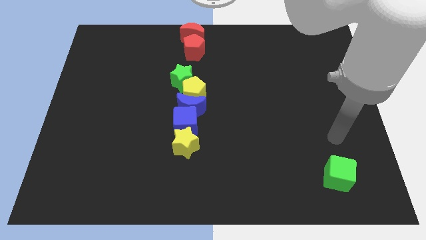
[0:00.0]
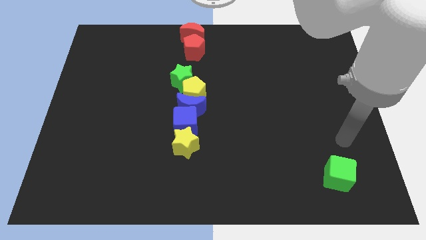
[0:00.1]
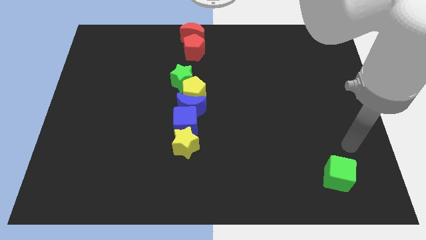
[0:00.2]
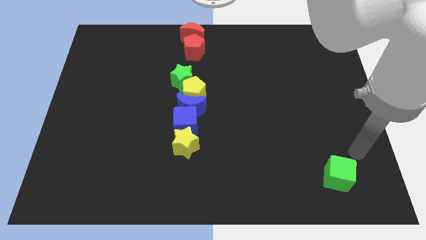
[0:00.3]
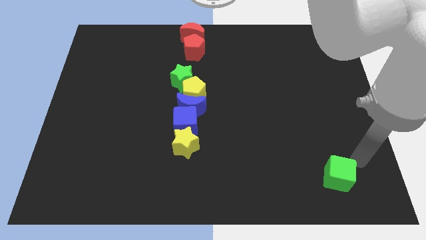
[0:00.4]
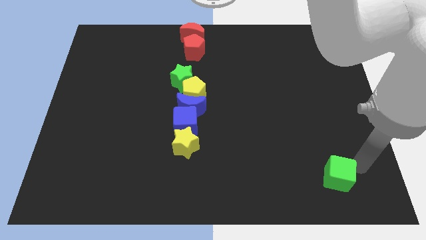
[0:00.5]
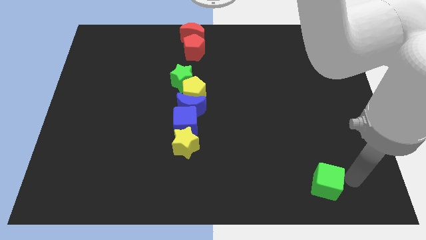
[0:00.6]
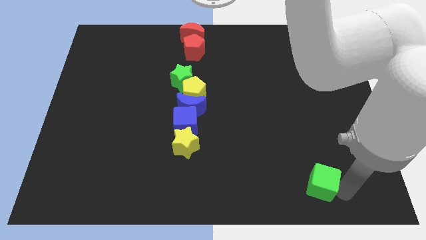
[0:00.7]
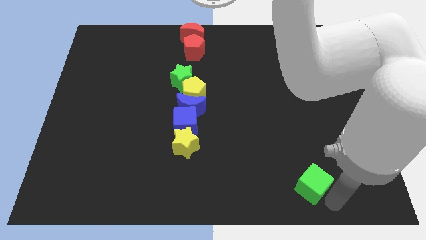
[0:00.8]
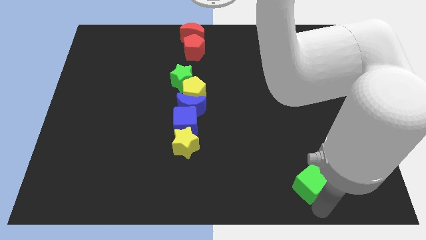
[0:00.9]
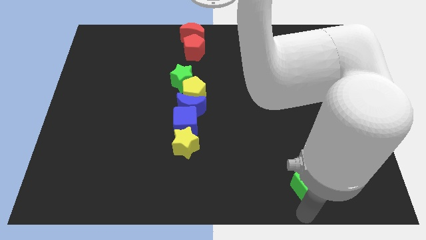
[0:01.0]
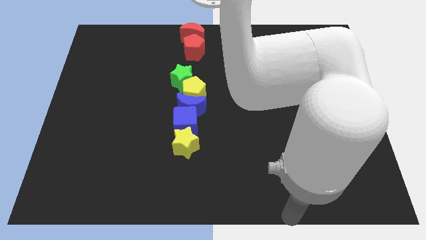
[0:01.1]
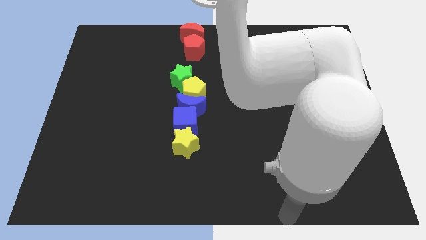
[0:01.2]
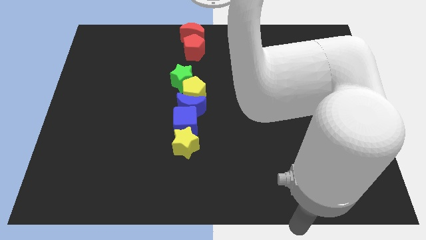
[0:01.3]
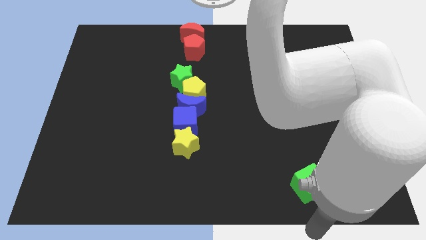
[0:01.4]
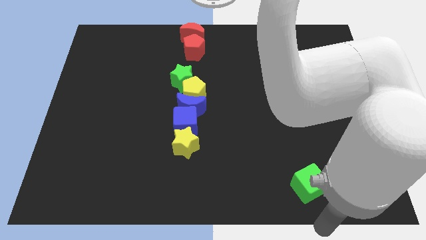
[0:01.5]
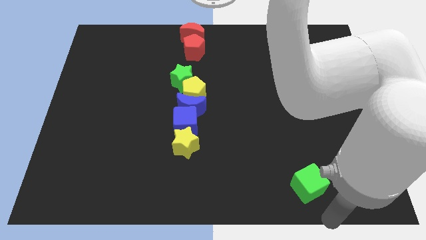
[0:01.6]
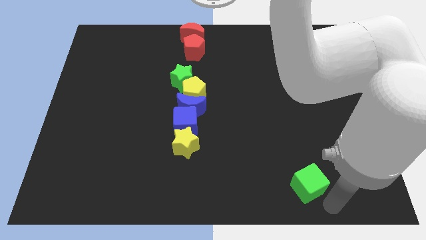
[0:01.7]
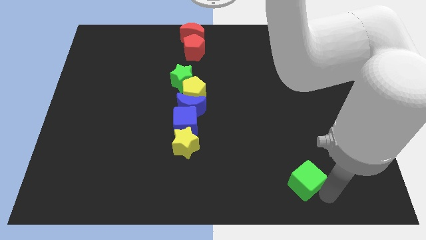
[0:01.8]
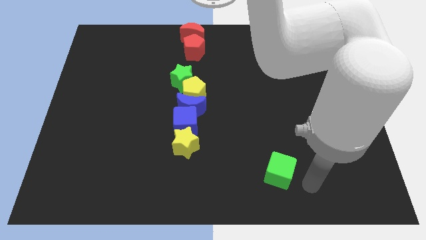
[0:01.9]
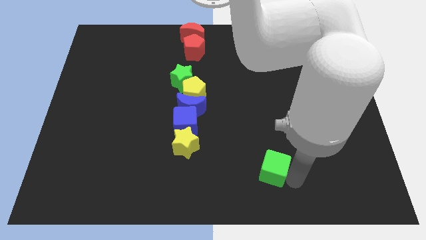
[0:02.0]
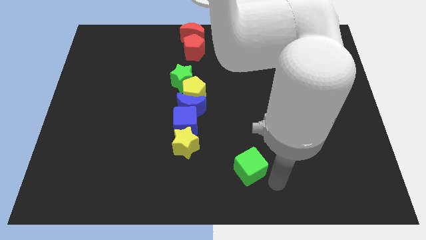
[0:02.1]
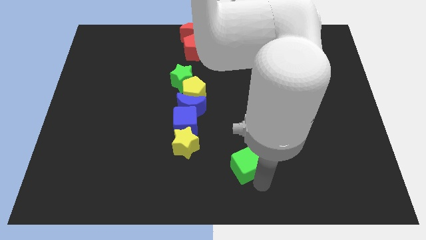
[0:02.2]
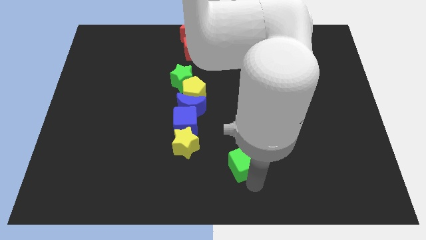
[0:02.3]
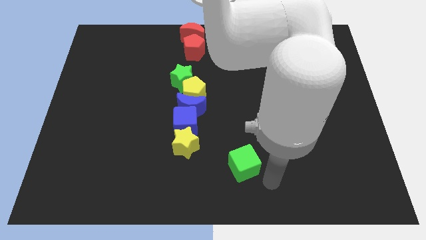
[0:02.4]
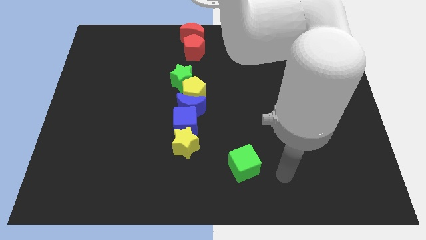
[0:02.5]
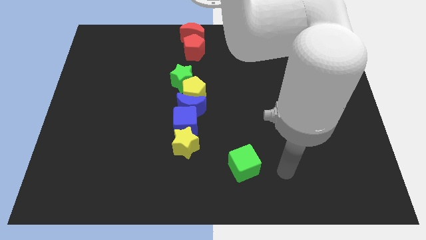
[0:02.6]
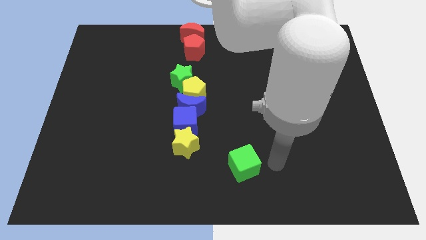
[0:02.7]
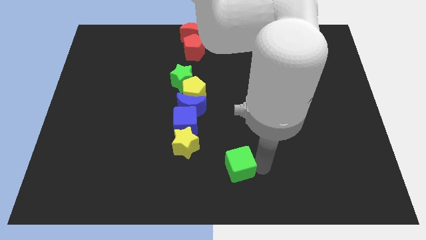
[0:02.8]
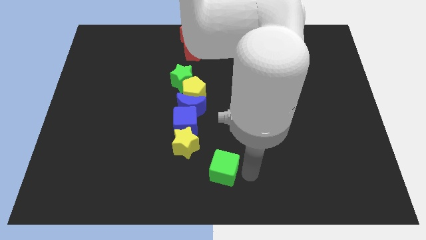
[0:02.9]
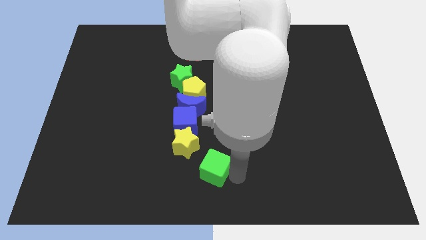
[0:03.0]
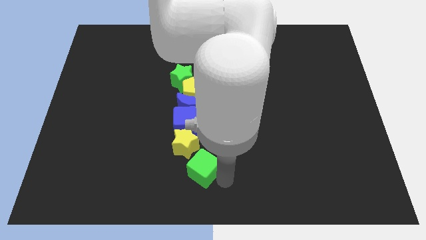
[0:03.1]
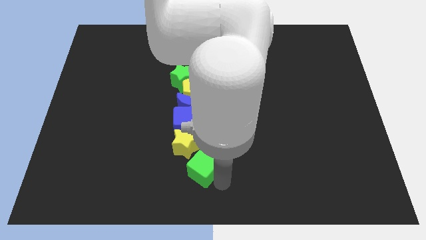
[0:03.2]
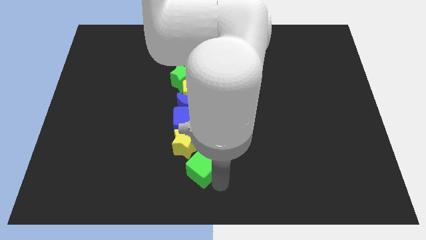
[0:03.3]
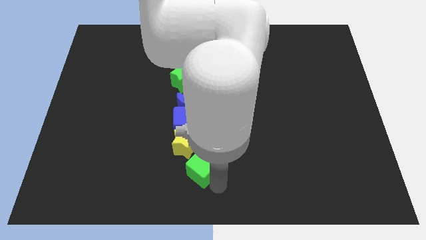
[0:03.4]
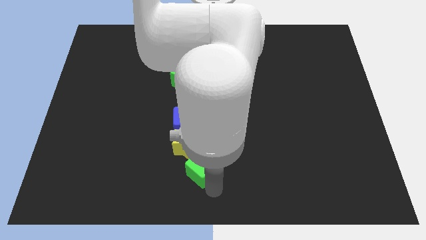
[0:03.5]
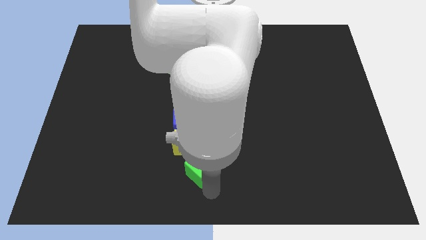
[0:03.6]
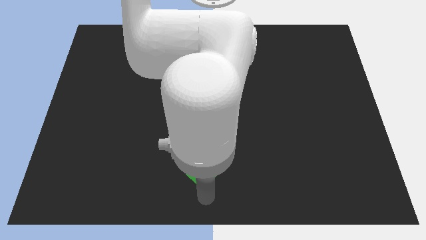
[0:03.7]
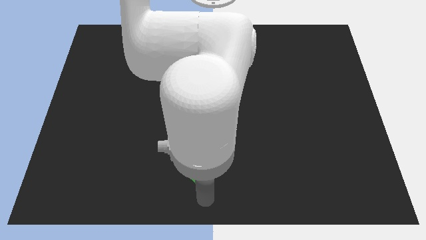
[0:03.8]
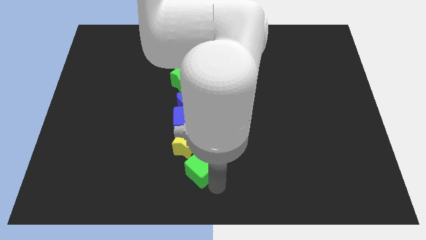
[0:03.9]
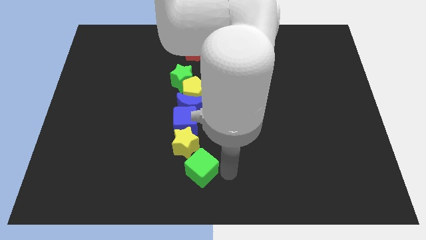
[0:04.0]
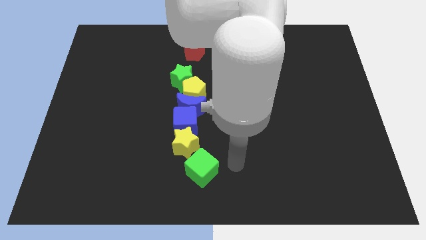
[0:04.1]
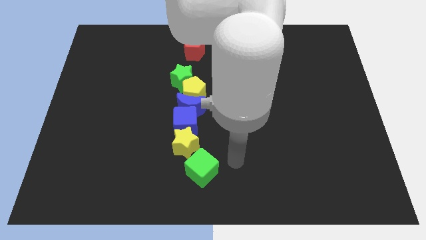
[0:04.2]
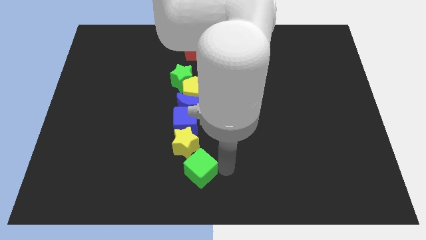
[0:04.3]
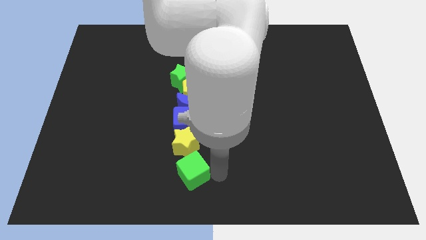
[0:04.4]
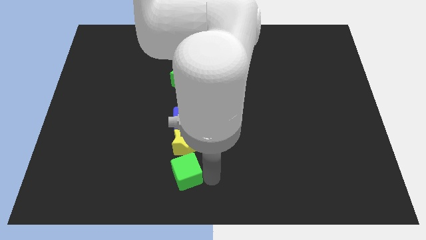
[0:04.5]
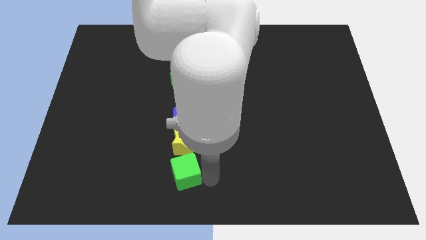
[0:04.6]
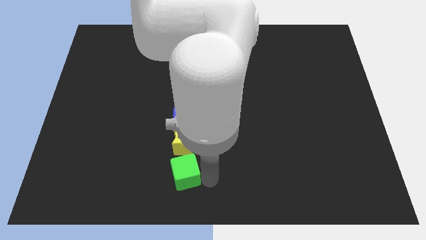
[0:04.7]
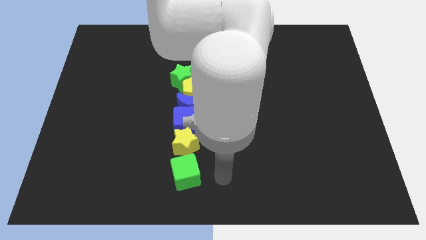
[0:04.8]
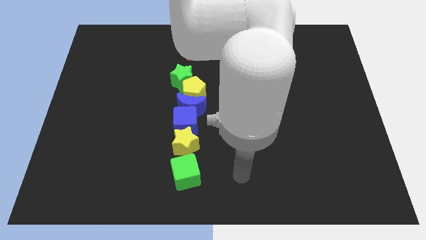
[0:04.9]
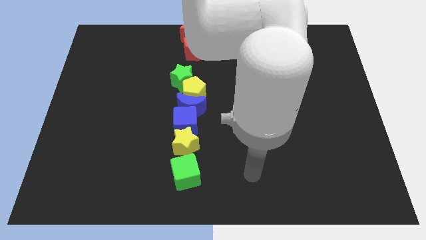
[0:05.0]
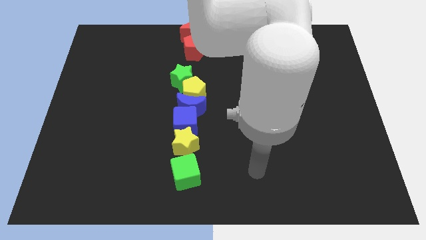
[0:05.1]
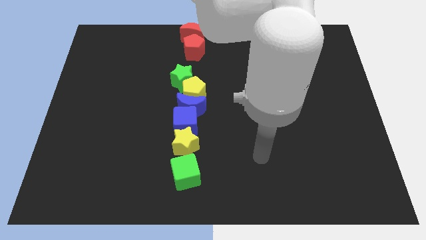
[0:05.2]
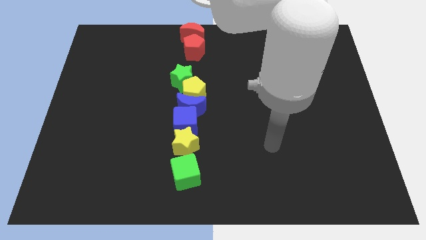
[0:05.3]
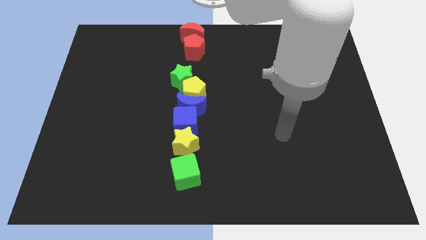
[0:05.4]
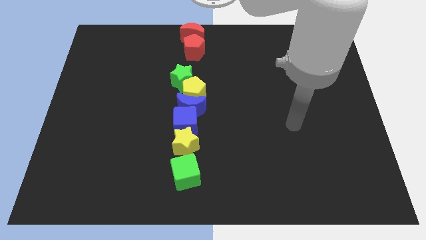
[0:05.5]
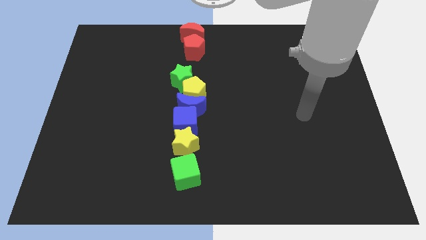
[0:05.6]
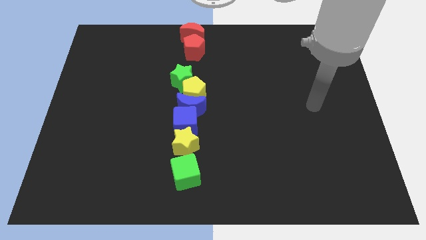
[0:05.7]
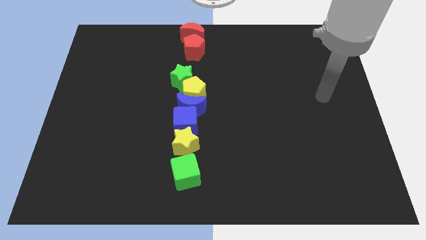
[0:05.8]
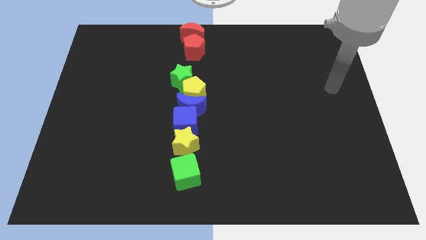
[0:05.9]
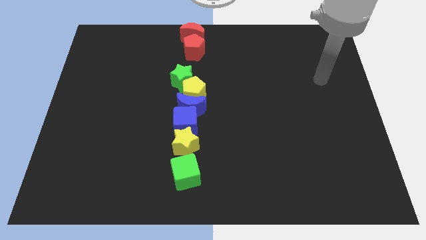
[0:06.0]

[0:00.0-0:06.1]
push green cube below yellow star

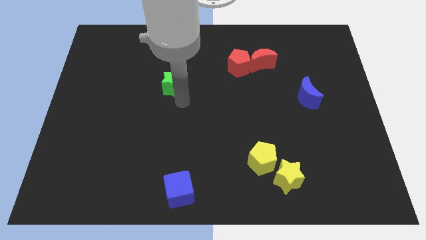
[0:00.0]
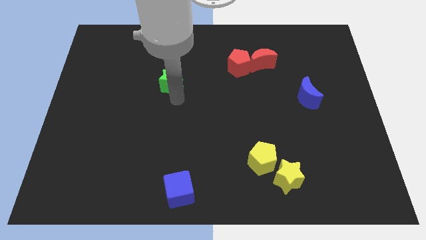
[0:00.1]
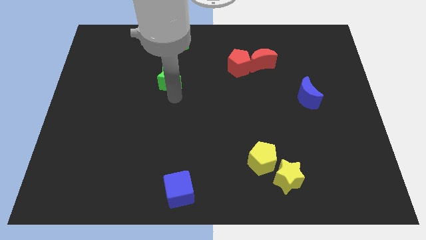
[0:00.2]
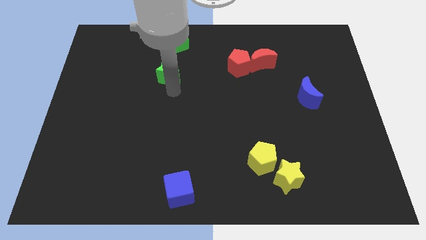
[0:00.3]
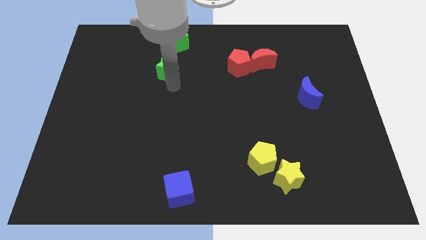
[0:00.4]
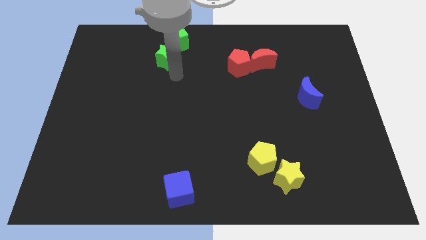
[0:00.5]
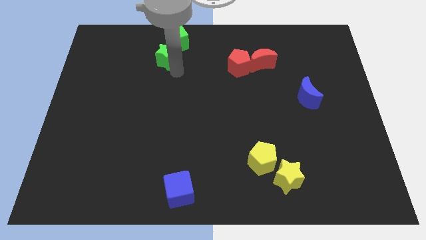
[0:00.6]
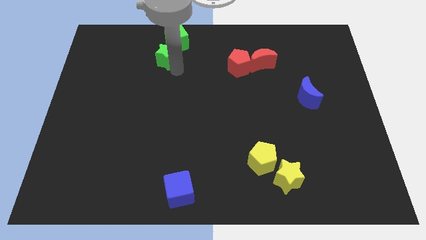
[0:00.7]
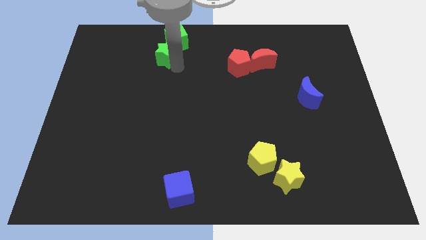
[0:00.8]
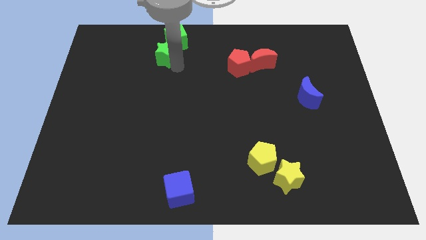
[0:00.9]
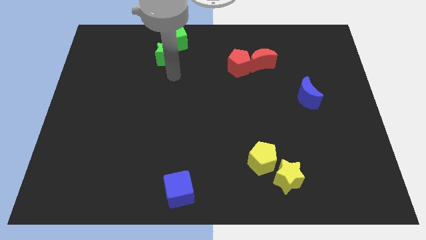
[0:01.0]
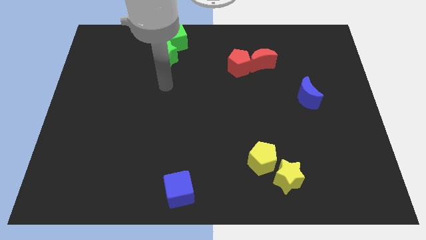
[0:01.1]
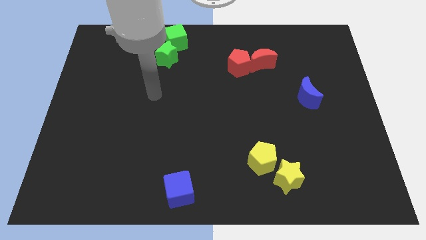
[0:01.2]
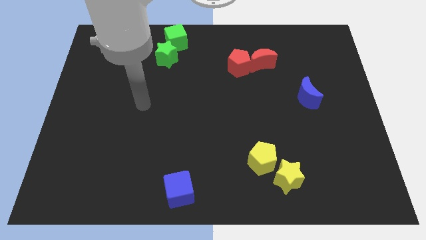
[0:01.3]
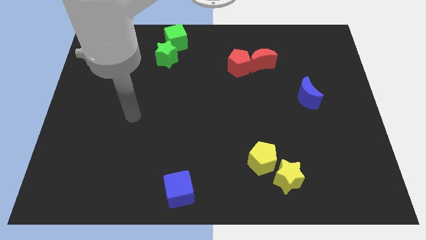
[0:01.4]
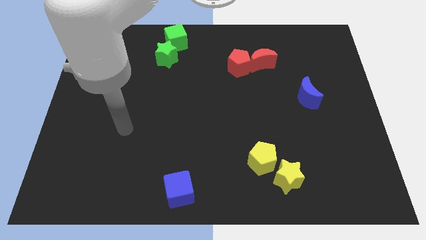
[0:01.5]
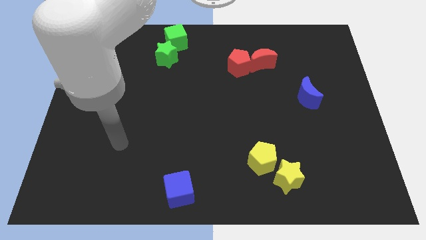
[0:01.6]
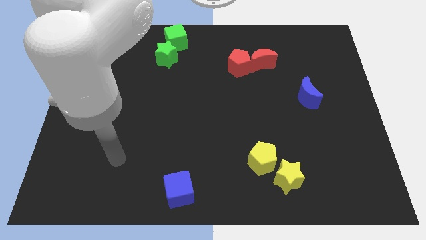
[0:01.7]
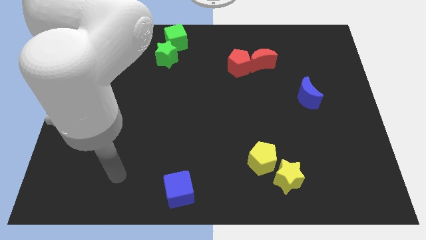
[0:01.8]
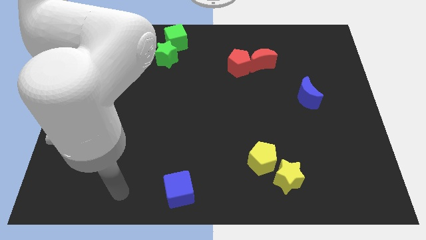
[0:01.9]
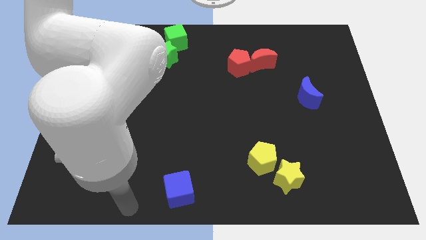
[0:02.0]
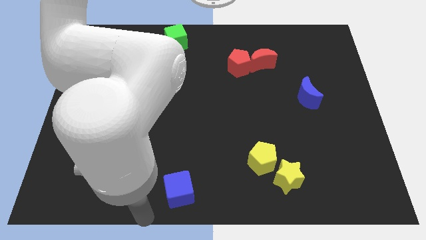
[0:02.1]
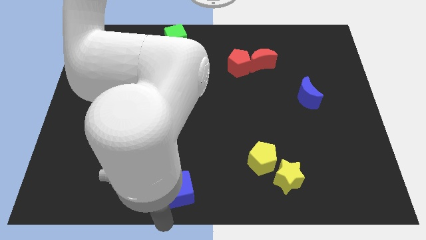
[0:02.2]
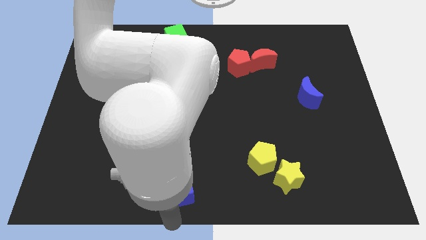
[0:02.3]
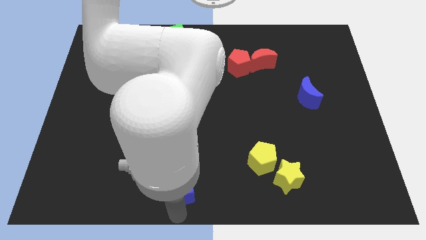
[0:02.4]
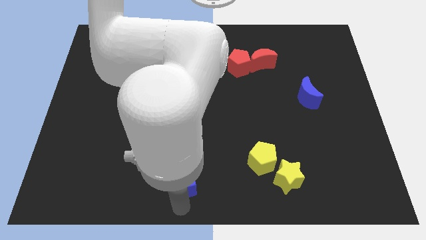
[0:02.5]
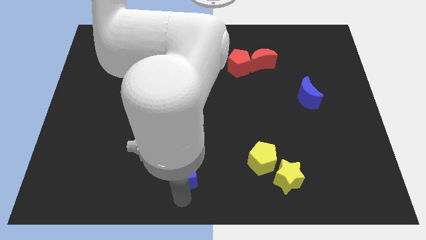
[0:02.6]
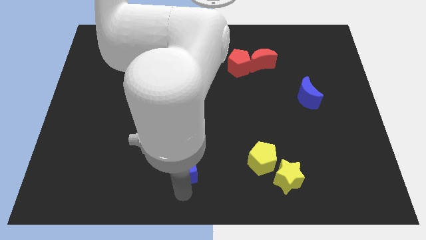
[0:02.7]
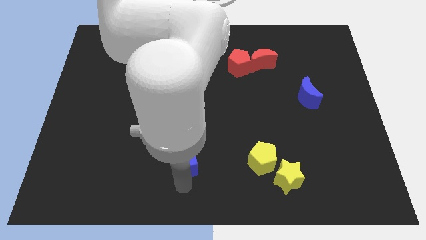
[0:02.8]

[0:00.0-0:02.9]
move your arm close to the blue cube

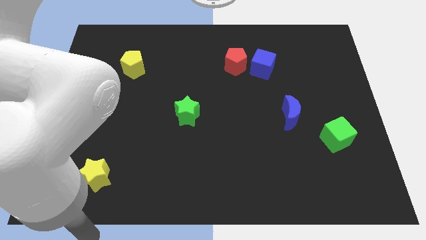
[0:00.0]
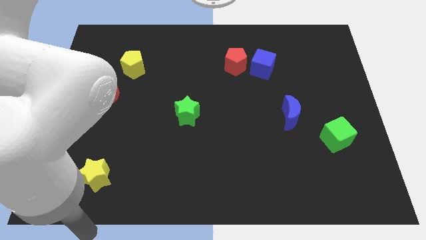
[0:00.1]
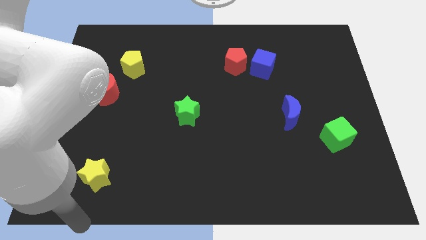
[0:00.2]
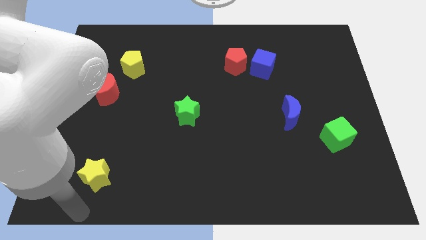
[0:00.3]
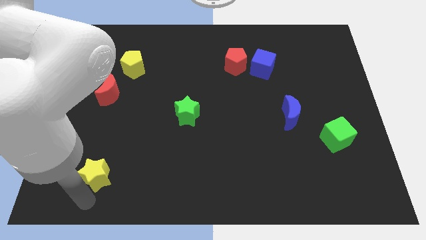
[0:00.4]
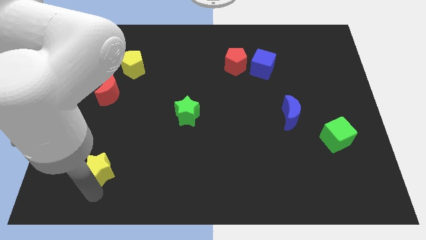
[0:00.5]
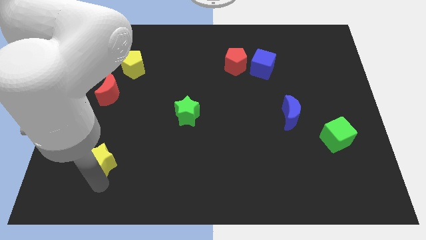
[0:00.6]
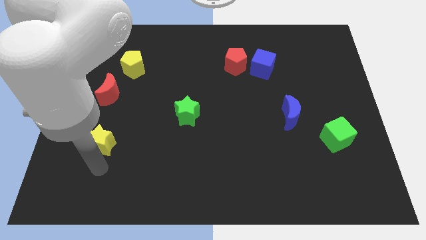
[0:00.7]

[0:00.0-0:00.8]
push the yellow star towards the red moon
